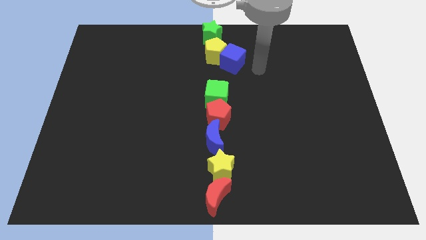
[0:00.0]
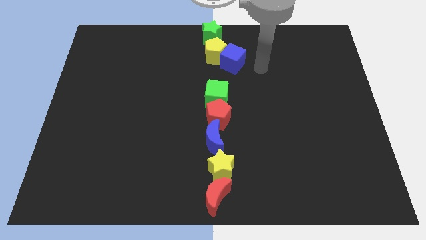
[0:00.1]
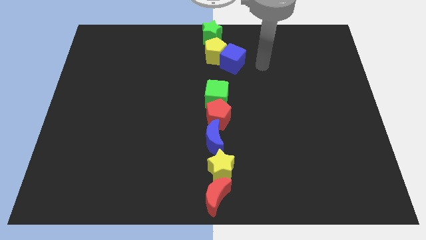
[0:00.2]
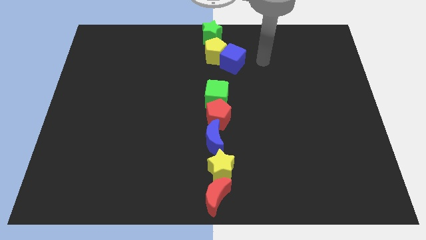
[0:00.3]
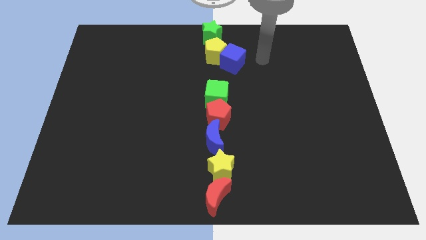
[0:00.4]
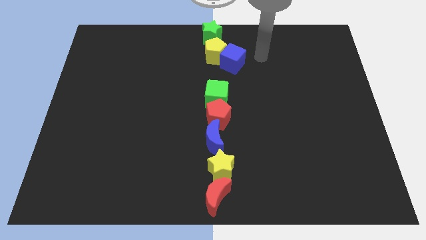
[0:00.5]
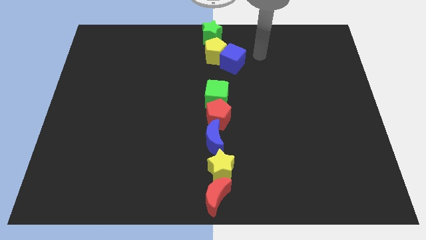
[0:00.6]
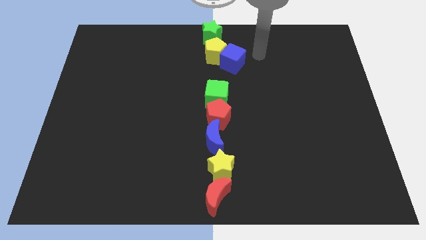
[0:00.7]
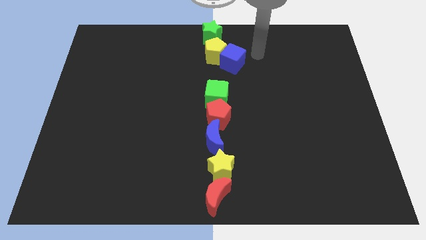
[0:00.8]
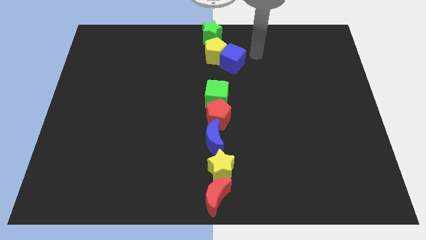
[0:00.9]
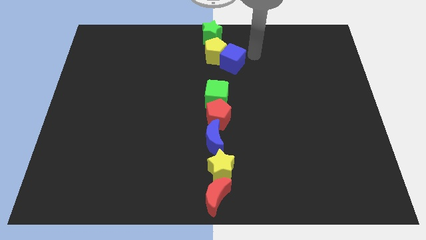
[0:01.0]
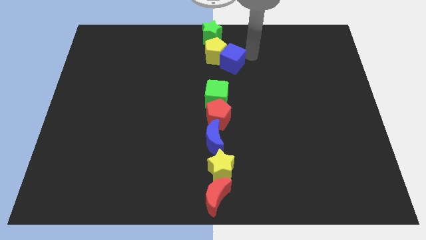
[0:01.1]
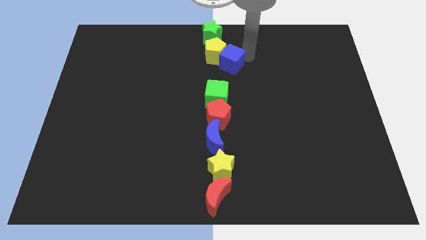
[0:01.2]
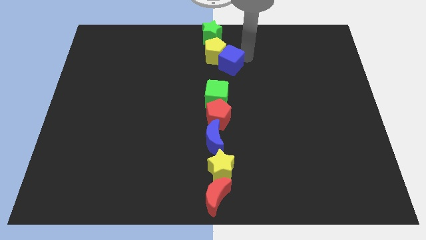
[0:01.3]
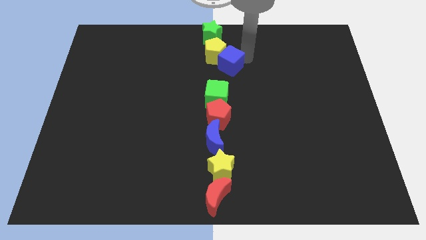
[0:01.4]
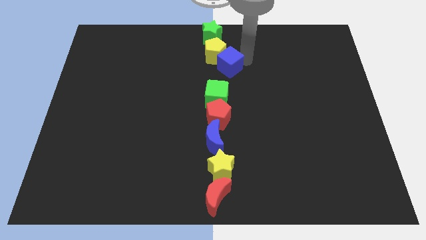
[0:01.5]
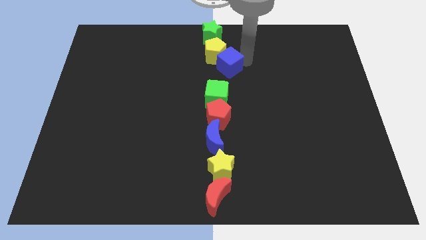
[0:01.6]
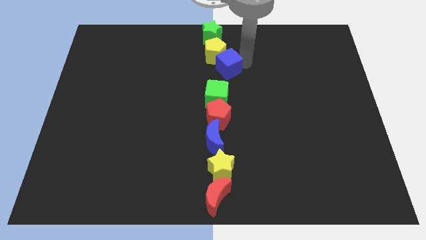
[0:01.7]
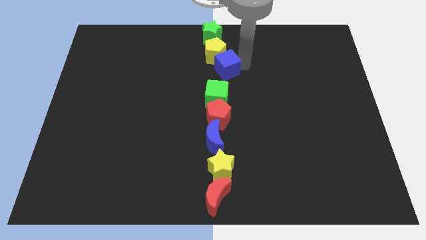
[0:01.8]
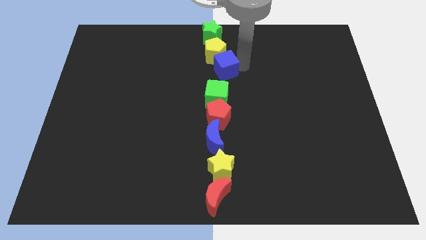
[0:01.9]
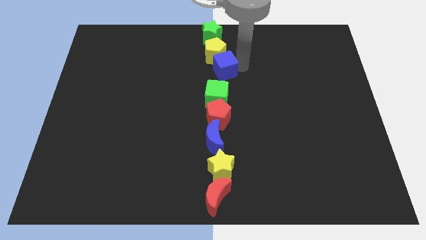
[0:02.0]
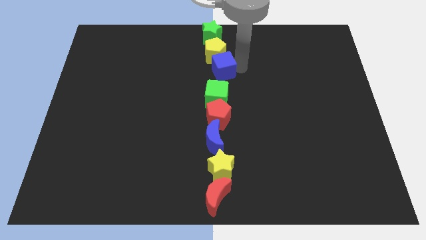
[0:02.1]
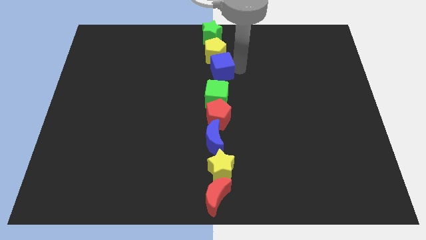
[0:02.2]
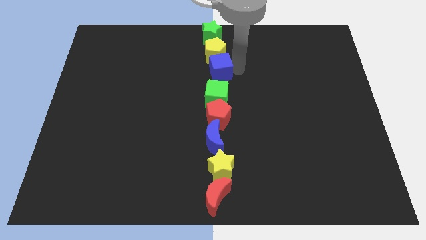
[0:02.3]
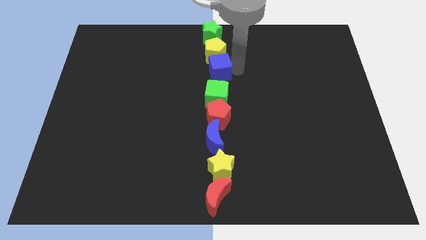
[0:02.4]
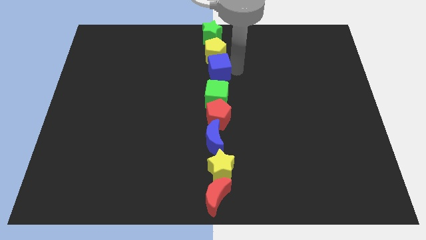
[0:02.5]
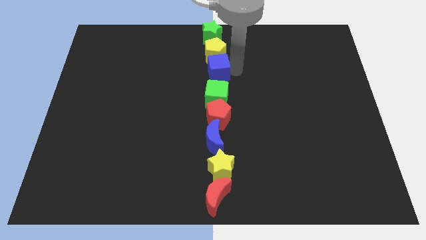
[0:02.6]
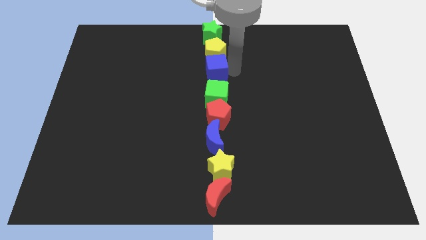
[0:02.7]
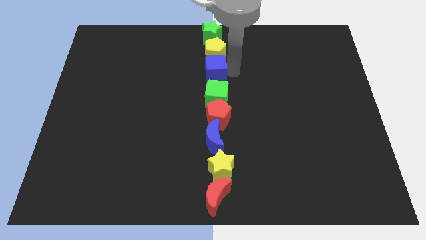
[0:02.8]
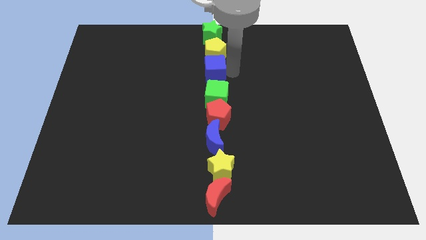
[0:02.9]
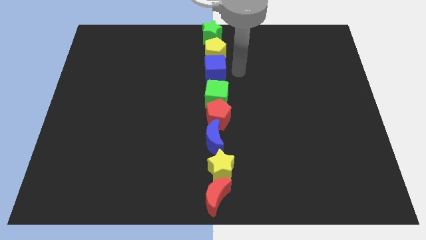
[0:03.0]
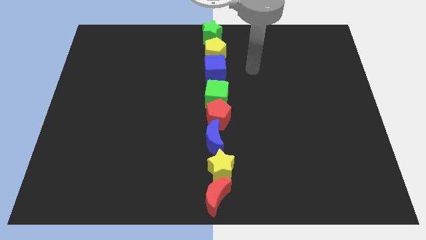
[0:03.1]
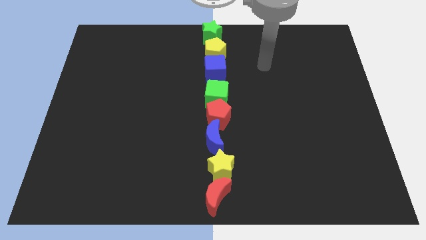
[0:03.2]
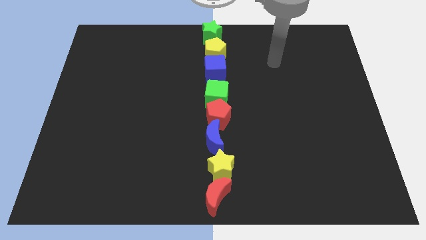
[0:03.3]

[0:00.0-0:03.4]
move blue cube below the yellow pentagon

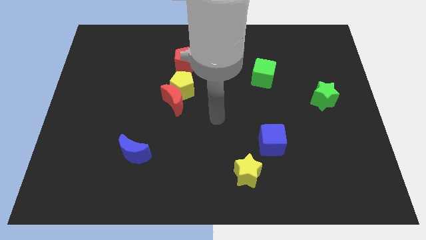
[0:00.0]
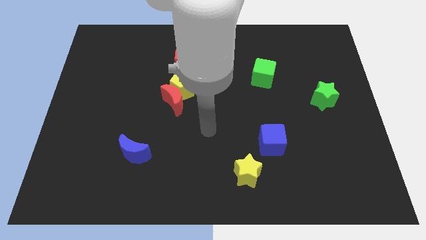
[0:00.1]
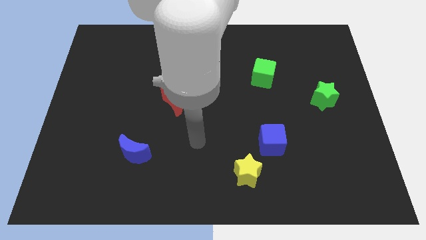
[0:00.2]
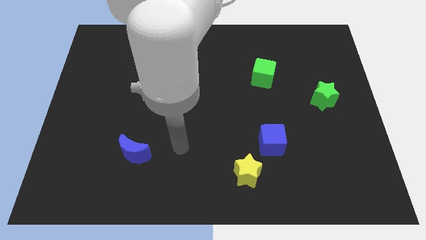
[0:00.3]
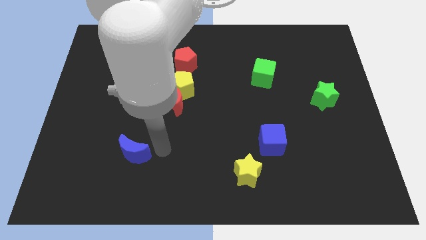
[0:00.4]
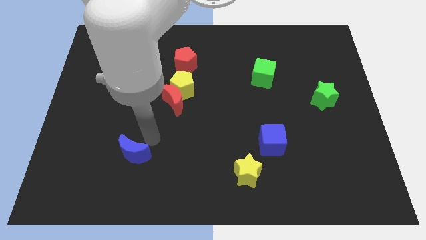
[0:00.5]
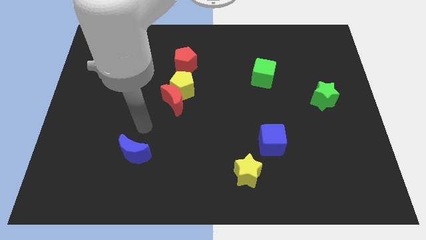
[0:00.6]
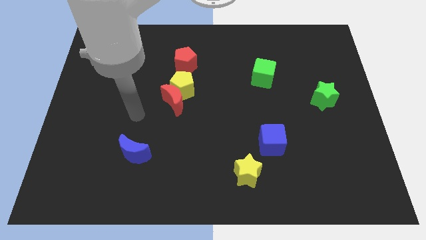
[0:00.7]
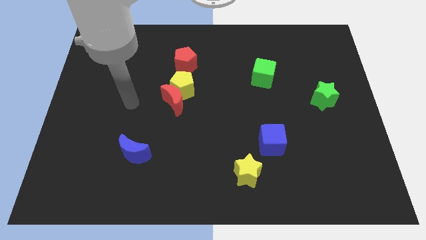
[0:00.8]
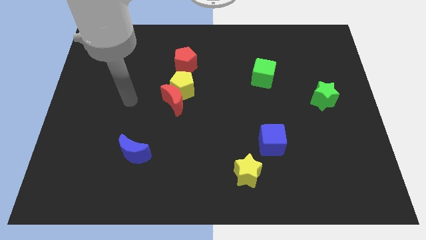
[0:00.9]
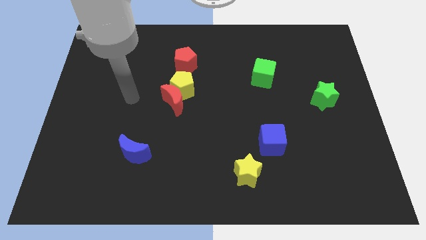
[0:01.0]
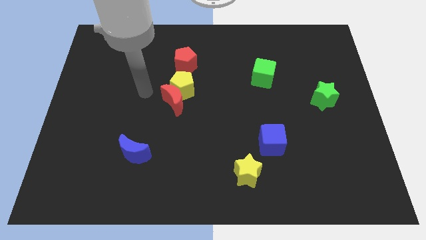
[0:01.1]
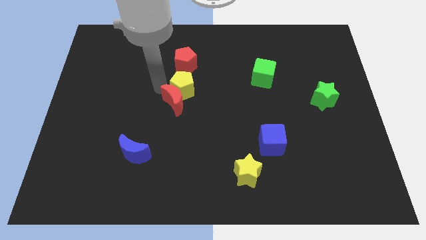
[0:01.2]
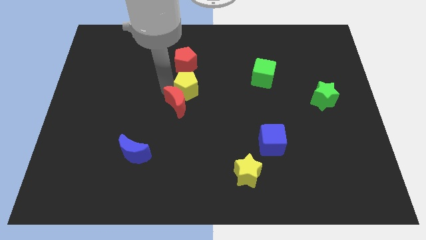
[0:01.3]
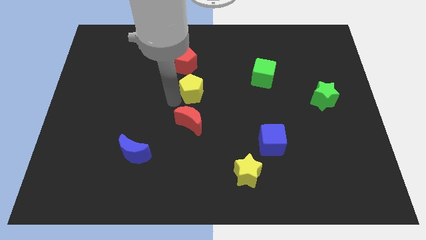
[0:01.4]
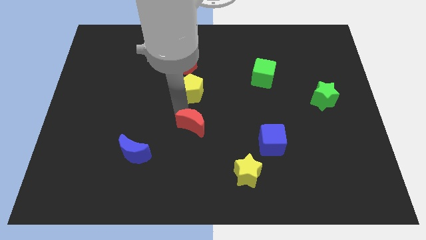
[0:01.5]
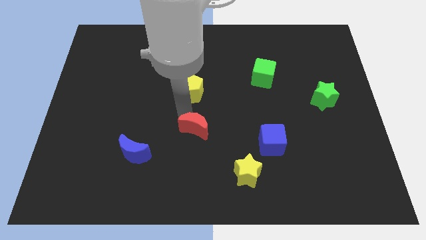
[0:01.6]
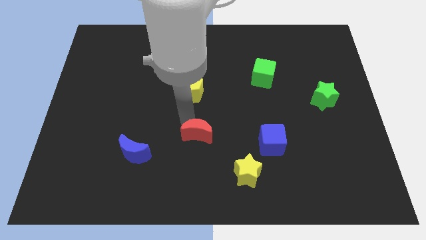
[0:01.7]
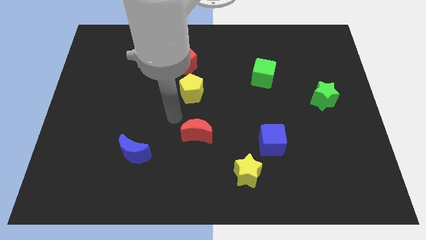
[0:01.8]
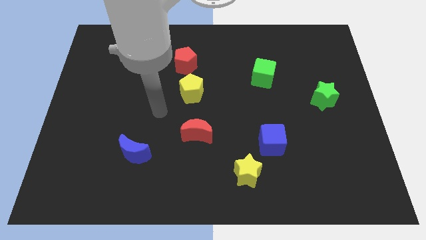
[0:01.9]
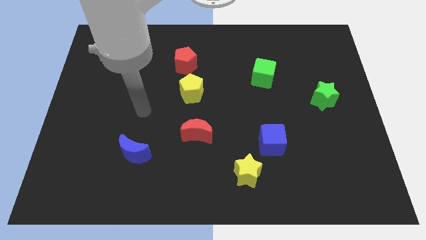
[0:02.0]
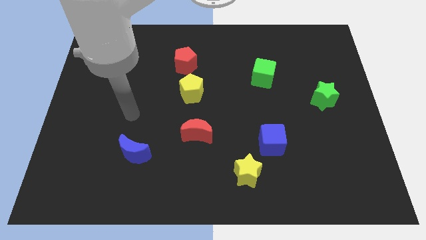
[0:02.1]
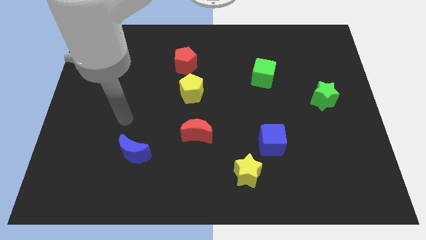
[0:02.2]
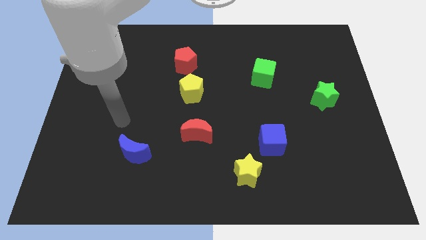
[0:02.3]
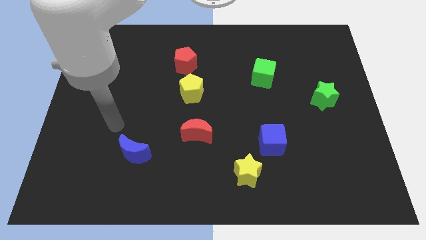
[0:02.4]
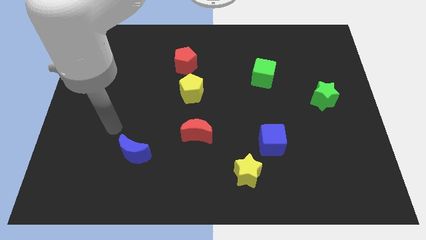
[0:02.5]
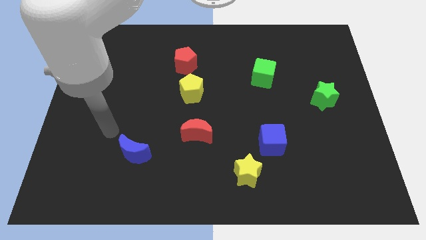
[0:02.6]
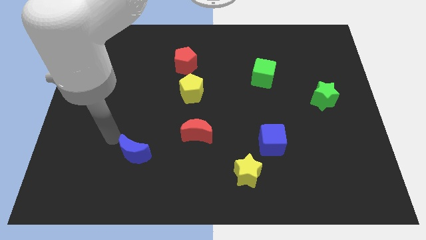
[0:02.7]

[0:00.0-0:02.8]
move the red crescent to the bottom of the yellow pentagon

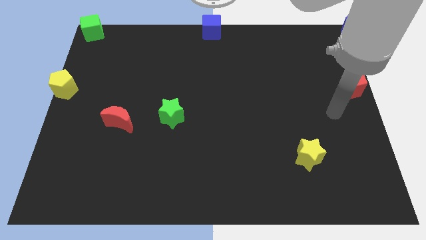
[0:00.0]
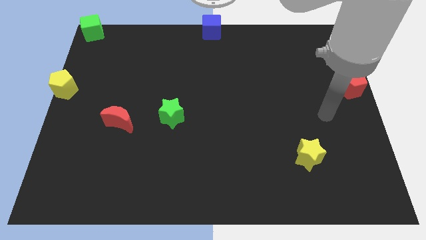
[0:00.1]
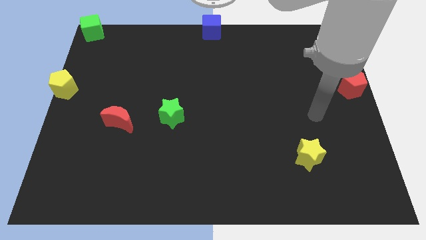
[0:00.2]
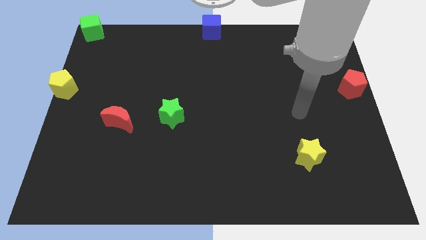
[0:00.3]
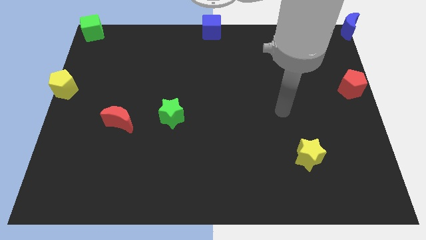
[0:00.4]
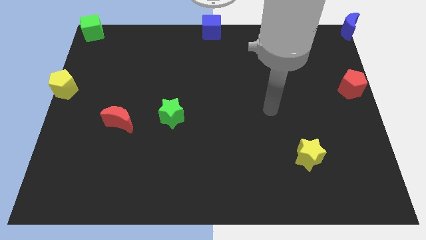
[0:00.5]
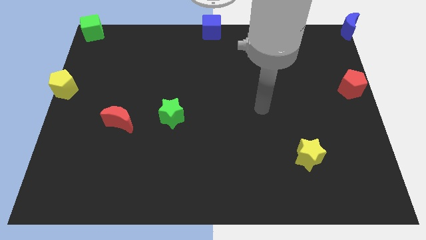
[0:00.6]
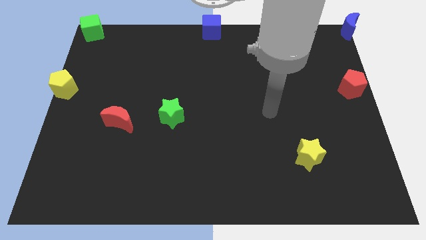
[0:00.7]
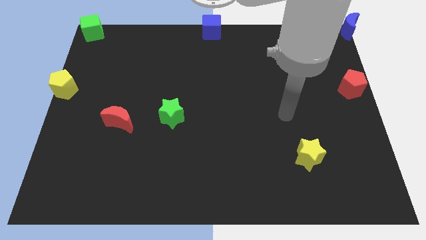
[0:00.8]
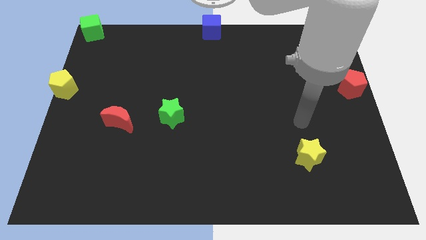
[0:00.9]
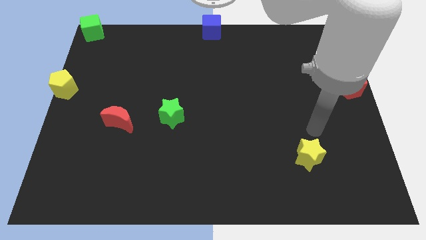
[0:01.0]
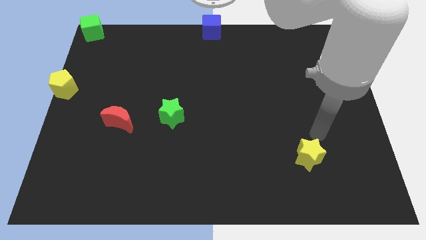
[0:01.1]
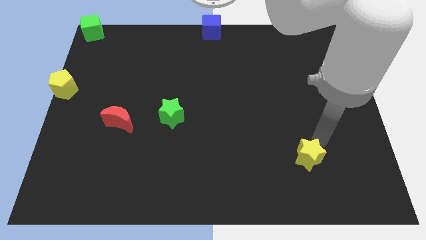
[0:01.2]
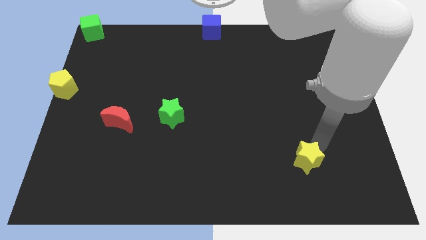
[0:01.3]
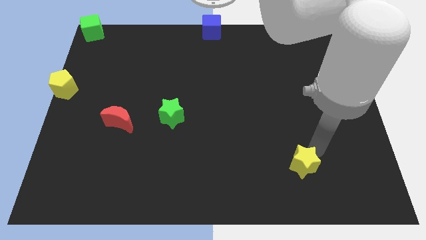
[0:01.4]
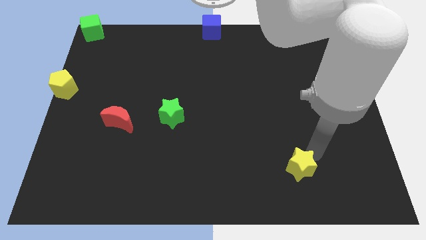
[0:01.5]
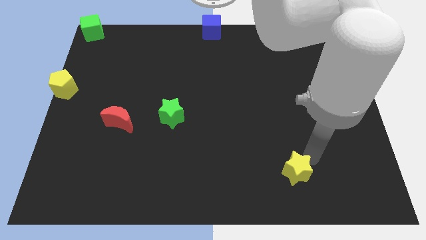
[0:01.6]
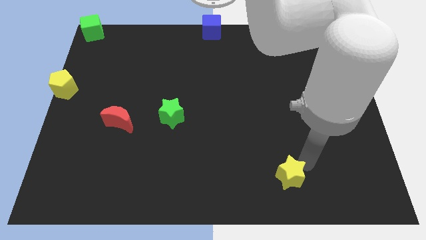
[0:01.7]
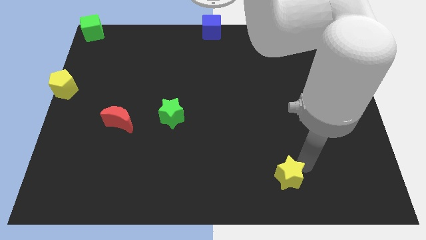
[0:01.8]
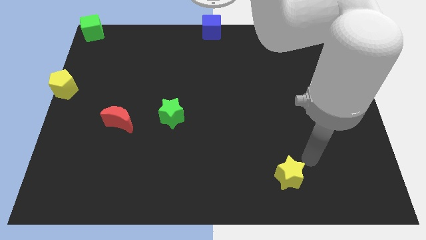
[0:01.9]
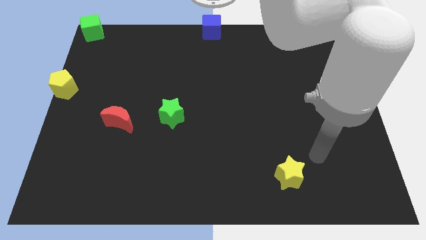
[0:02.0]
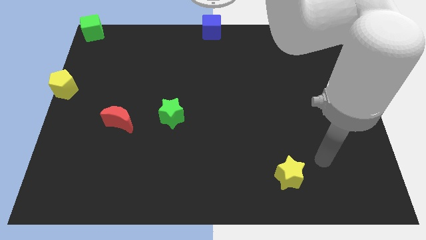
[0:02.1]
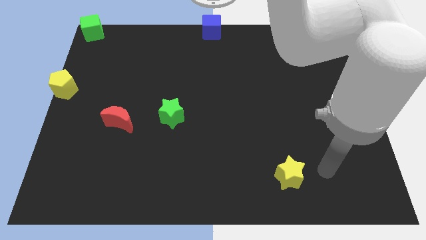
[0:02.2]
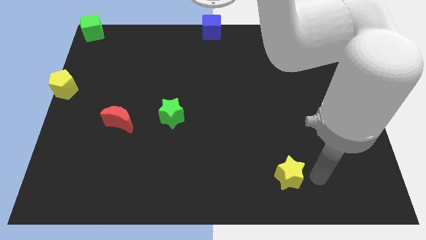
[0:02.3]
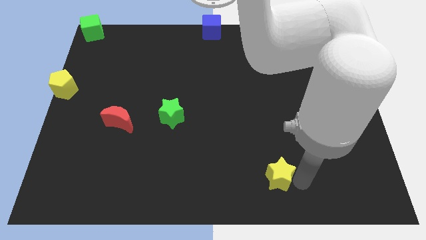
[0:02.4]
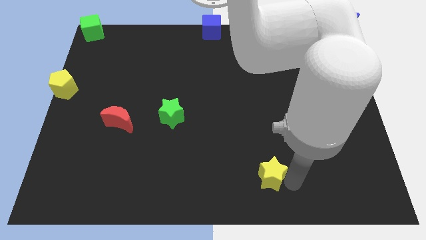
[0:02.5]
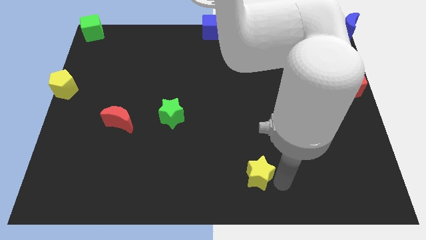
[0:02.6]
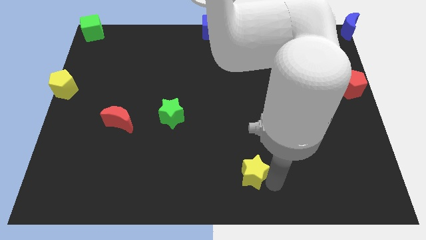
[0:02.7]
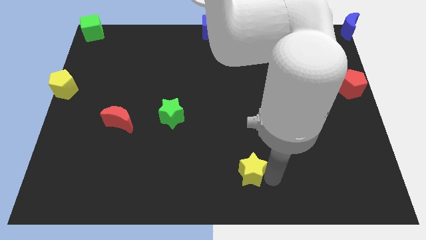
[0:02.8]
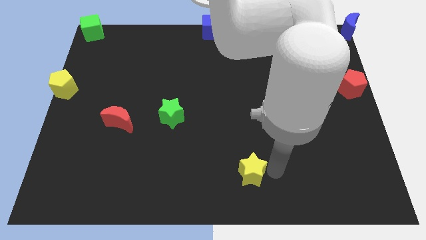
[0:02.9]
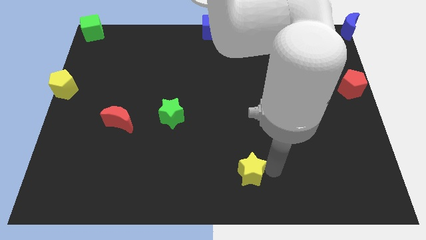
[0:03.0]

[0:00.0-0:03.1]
move yellow star slightly towards the left of the board
